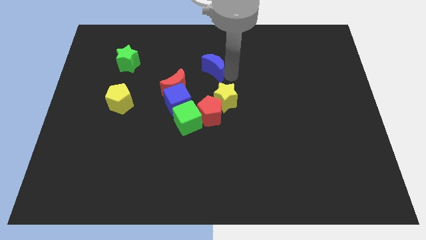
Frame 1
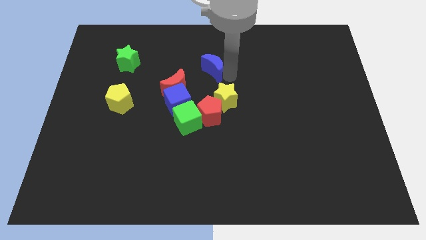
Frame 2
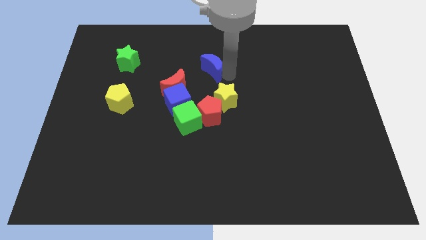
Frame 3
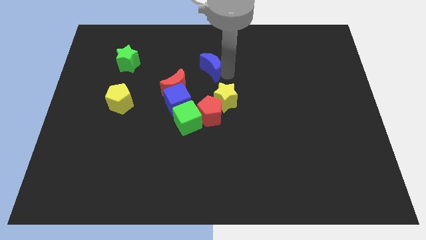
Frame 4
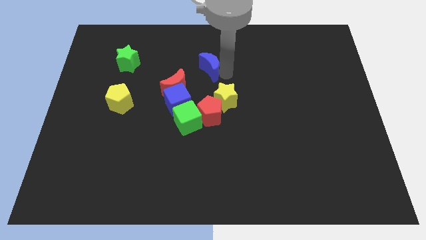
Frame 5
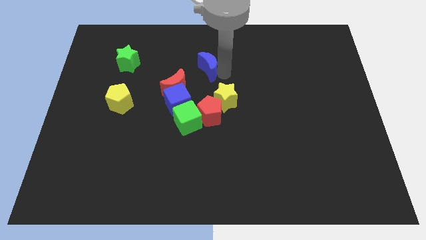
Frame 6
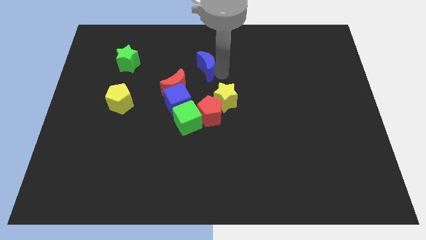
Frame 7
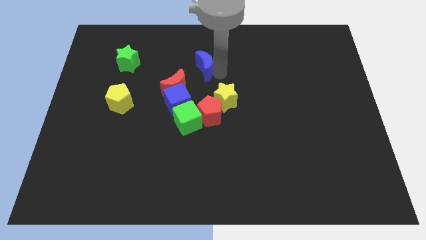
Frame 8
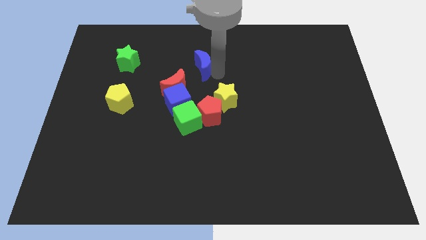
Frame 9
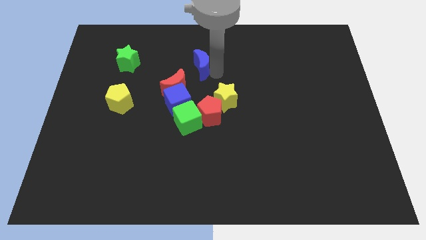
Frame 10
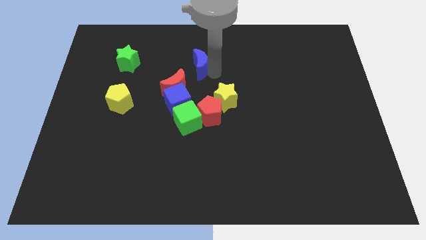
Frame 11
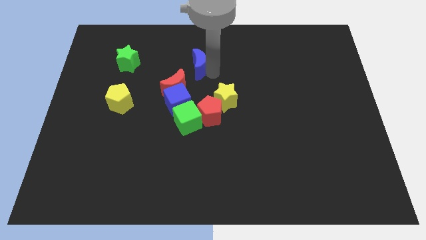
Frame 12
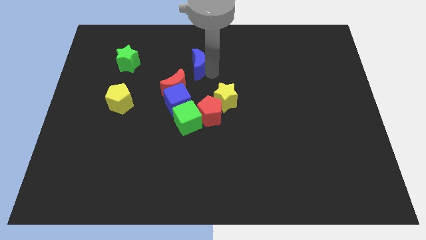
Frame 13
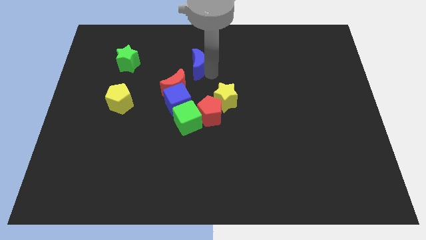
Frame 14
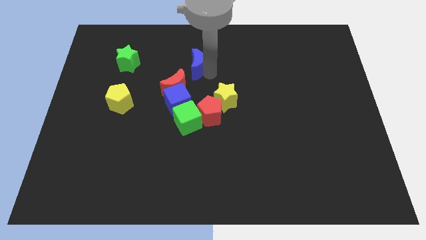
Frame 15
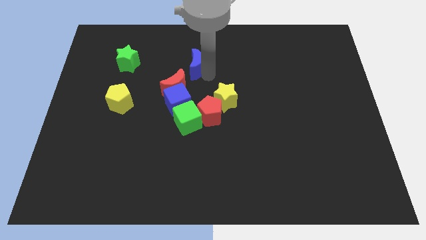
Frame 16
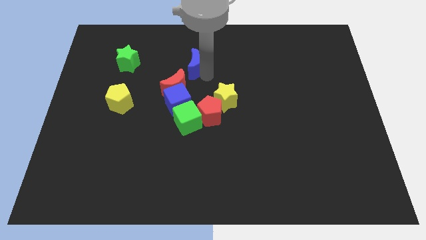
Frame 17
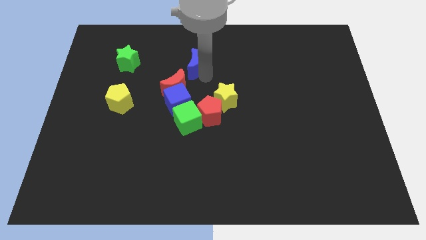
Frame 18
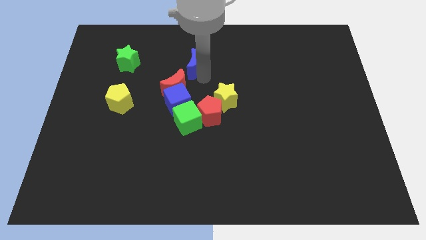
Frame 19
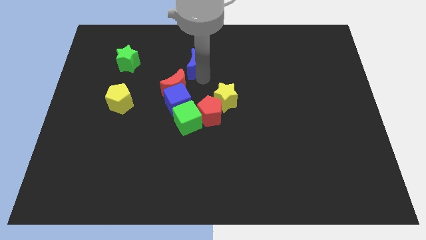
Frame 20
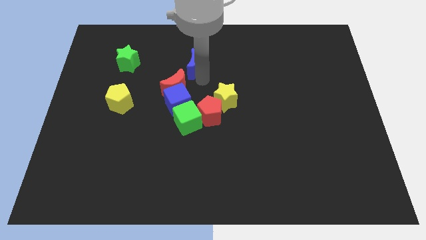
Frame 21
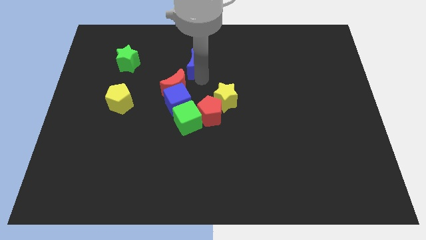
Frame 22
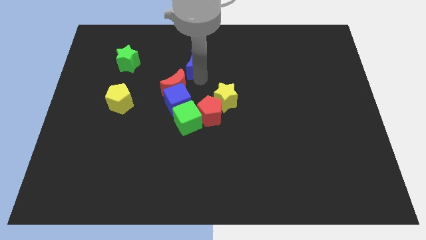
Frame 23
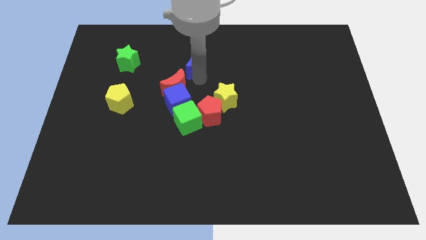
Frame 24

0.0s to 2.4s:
move the blue moon slightly to the left

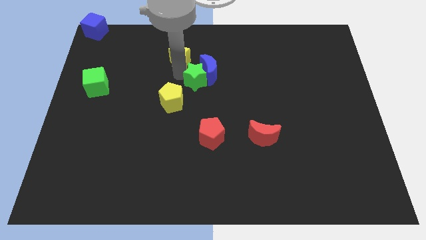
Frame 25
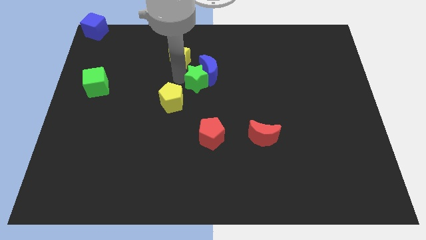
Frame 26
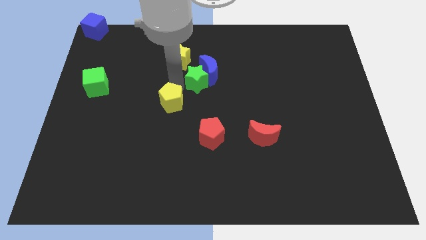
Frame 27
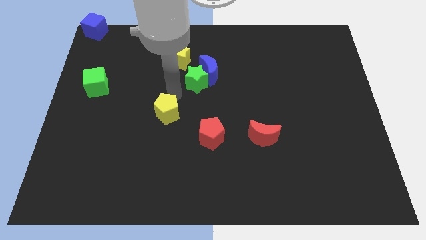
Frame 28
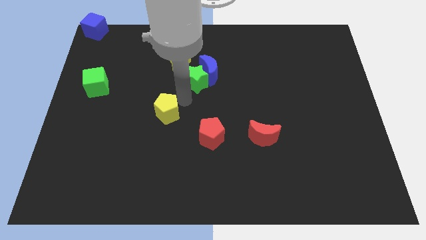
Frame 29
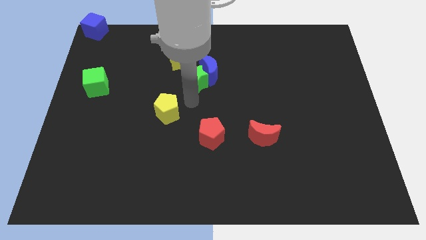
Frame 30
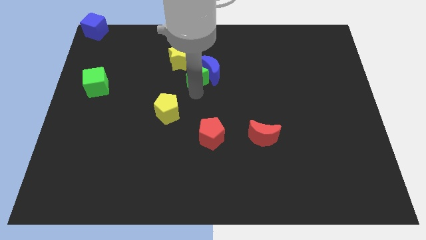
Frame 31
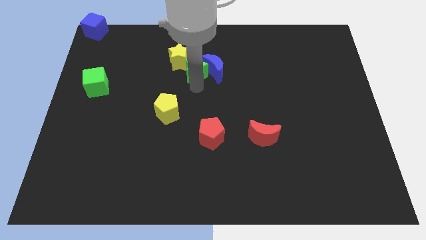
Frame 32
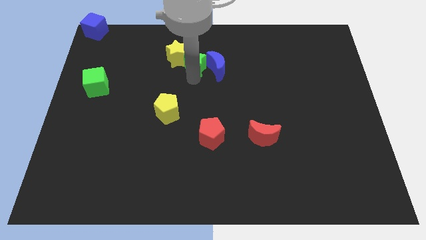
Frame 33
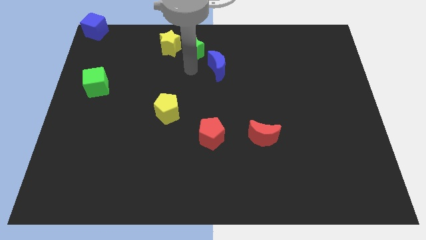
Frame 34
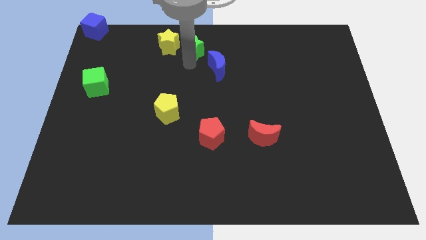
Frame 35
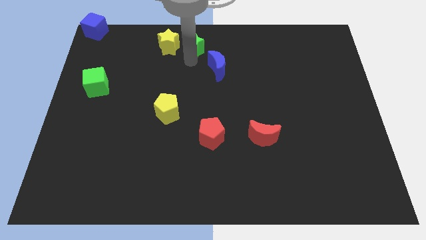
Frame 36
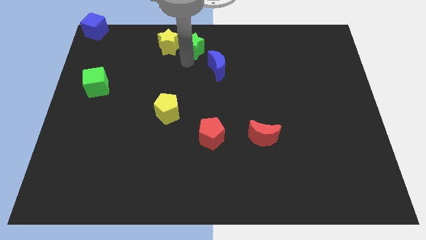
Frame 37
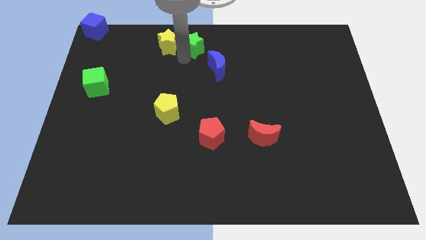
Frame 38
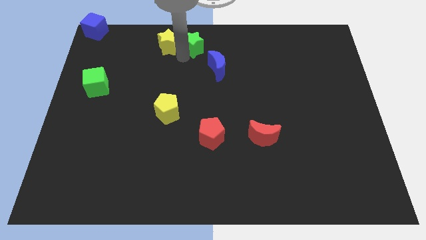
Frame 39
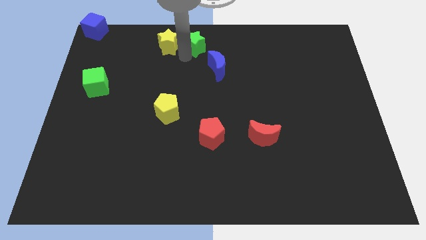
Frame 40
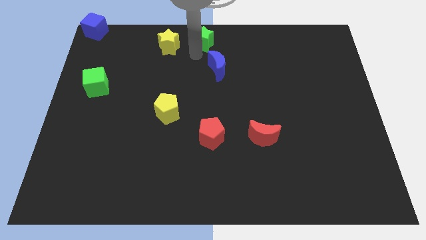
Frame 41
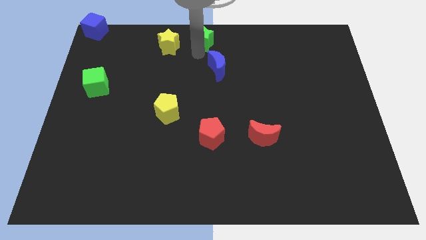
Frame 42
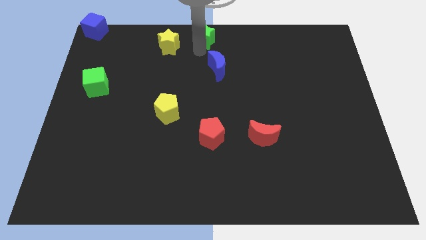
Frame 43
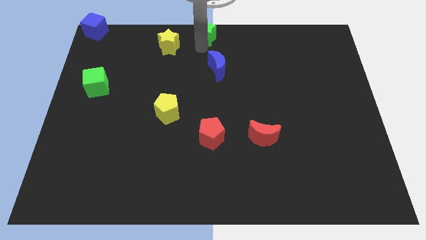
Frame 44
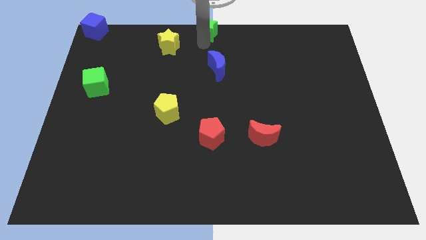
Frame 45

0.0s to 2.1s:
move the green star to the top center corner of the board

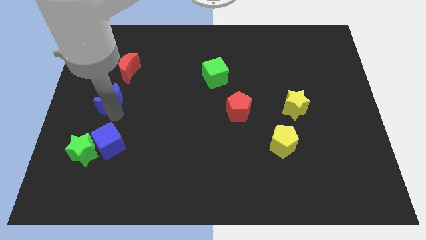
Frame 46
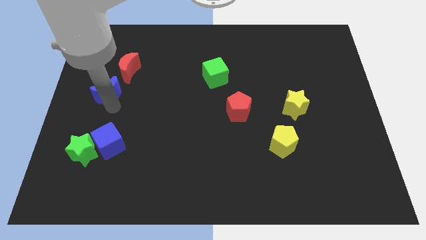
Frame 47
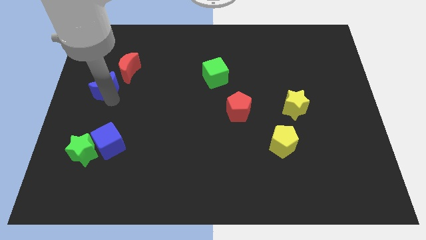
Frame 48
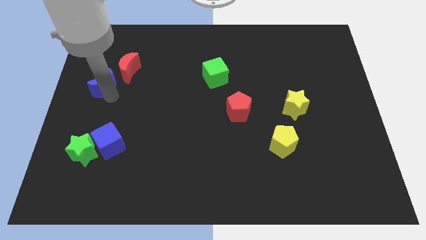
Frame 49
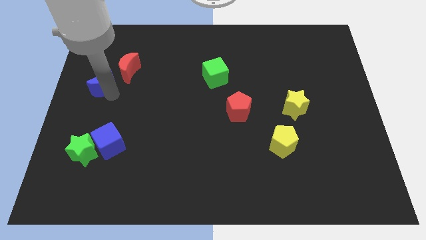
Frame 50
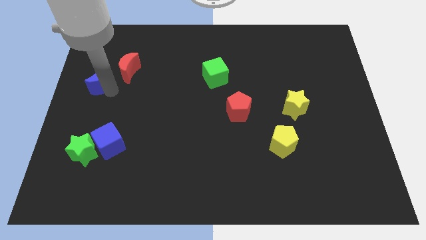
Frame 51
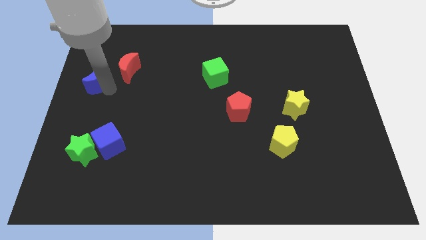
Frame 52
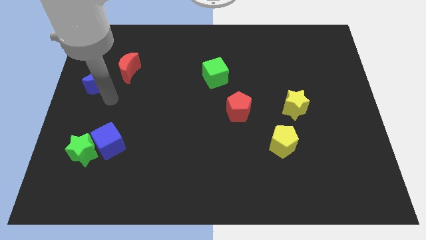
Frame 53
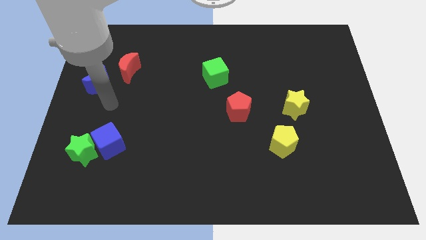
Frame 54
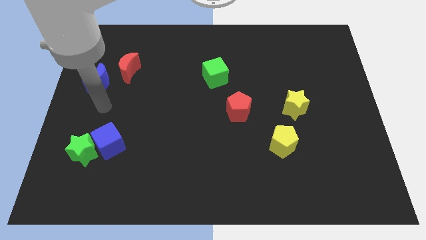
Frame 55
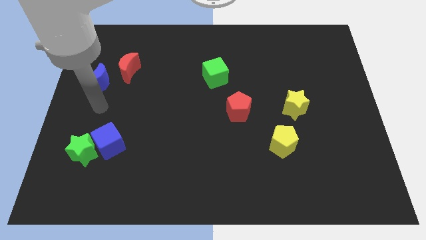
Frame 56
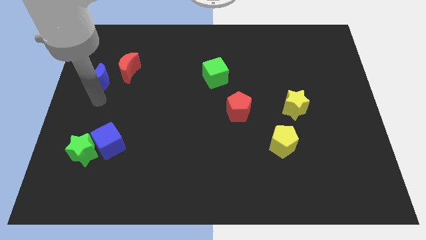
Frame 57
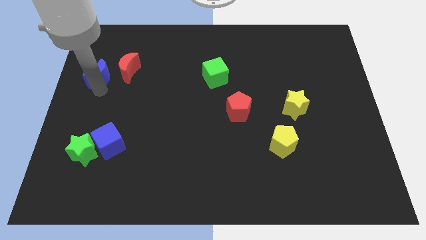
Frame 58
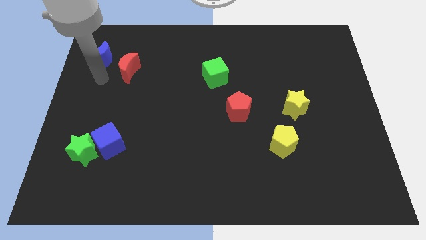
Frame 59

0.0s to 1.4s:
place the blue moon to the left of the red moon

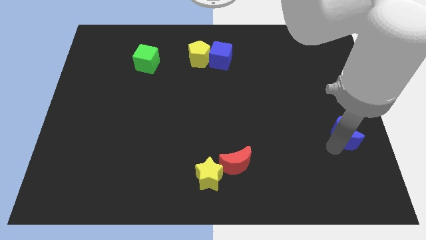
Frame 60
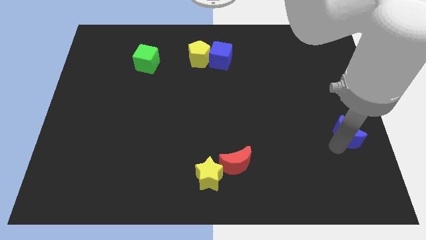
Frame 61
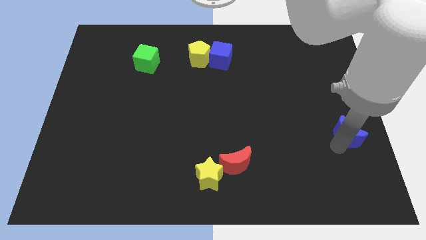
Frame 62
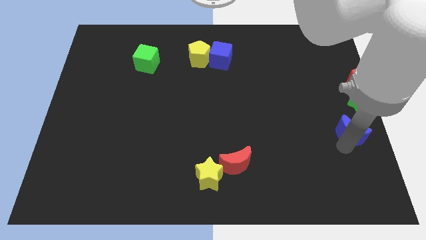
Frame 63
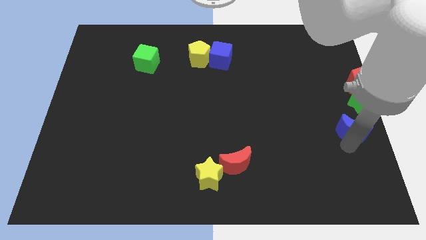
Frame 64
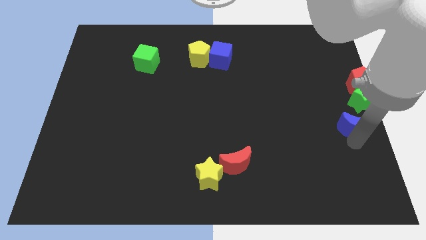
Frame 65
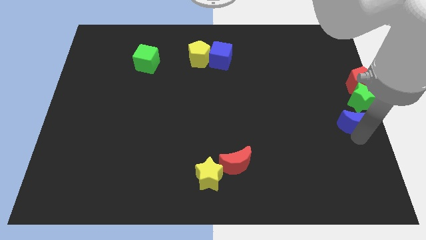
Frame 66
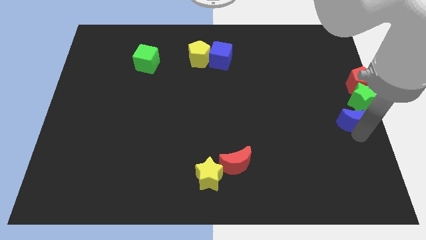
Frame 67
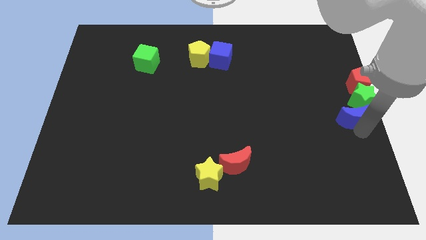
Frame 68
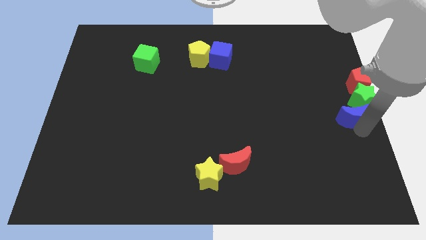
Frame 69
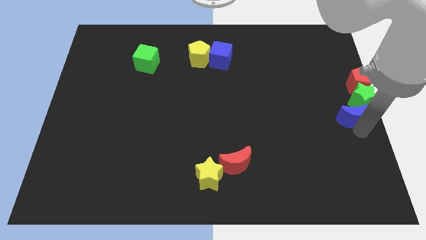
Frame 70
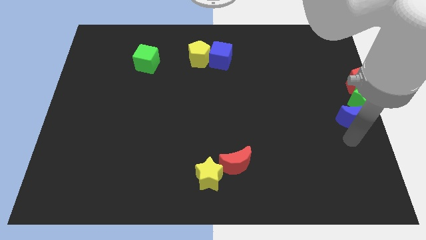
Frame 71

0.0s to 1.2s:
move blue moon bottom left to green star

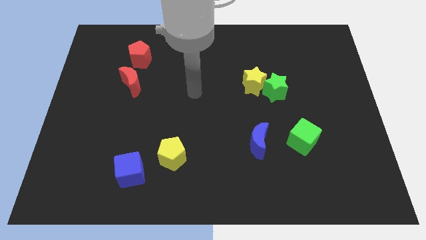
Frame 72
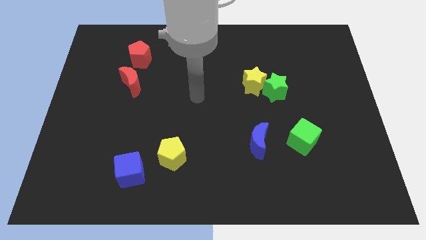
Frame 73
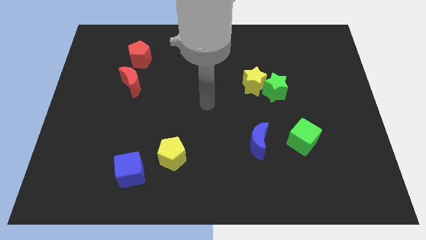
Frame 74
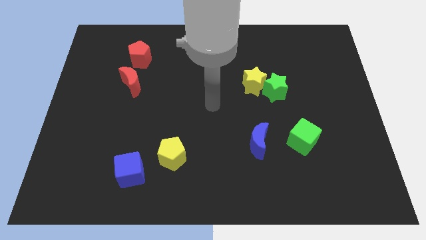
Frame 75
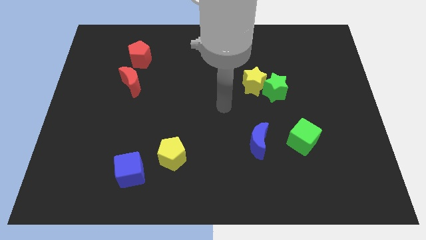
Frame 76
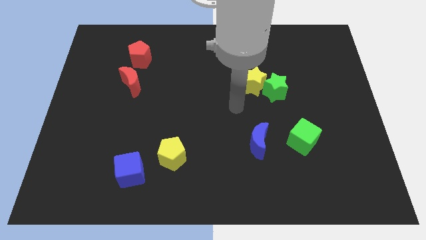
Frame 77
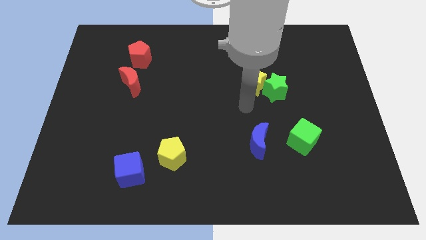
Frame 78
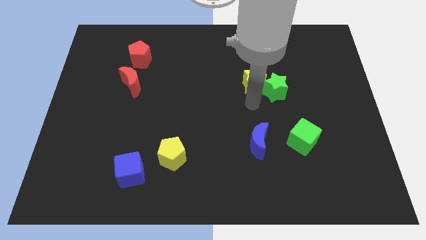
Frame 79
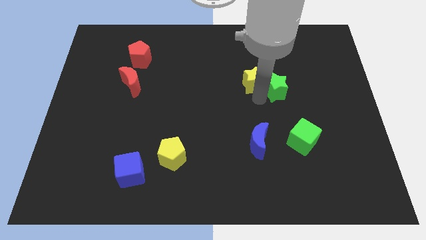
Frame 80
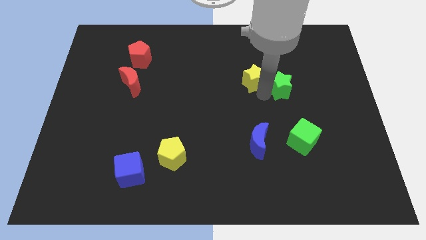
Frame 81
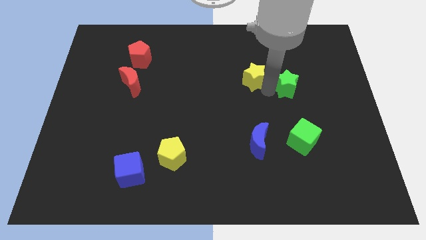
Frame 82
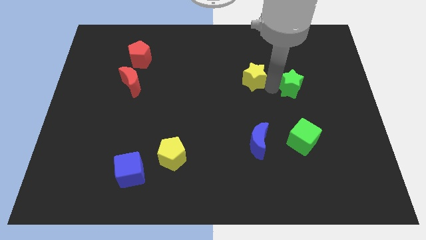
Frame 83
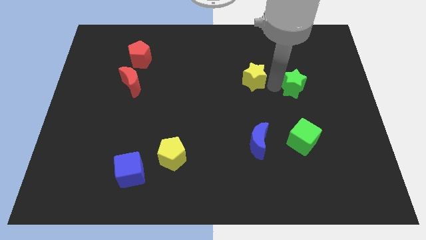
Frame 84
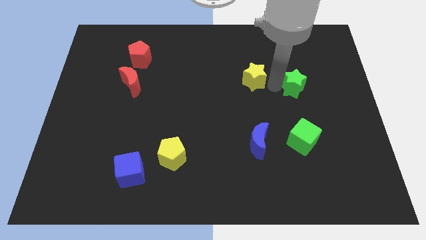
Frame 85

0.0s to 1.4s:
place your arm in between the yellow and the green star

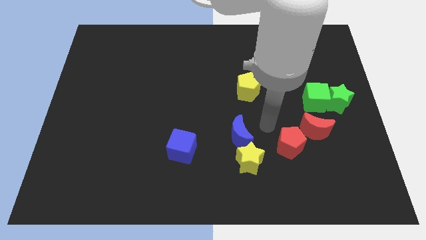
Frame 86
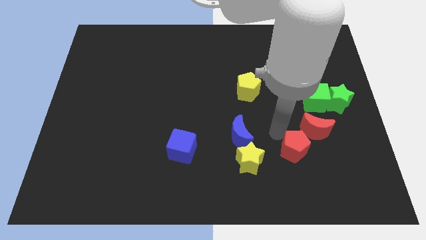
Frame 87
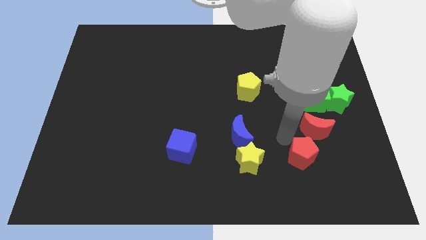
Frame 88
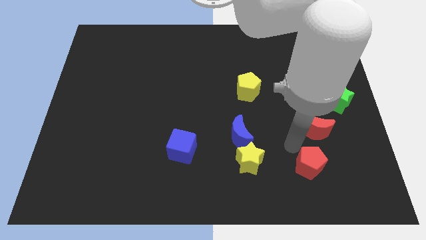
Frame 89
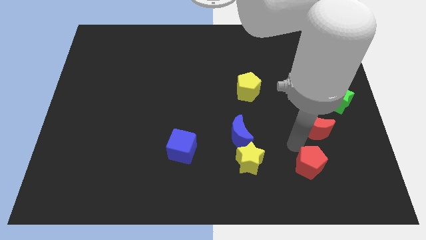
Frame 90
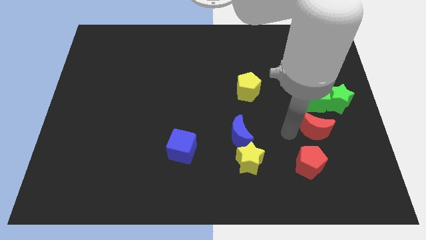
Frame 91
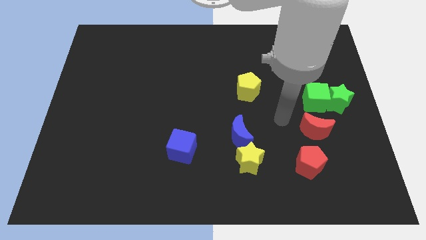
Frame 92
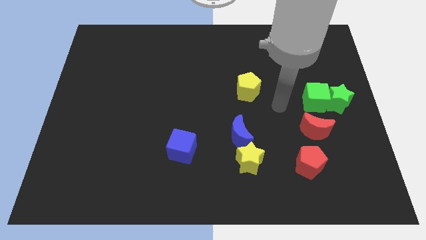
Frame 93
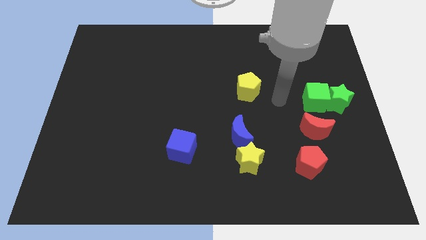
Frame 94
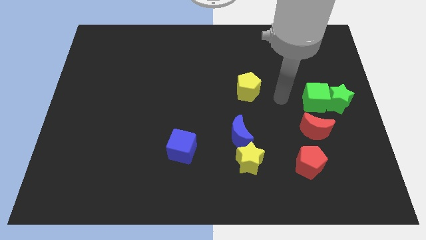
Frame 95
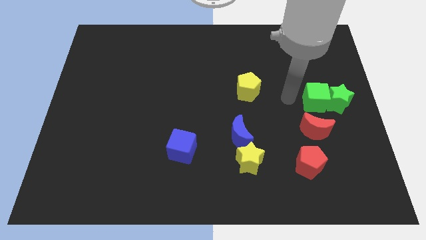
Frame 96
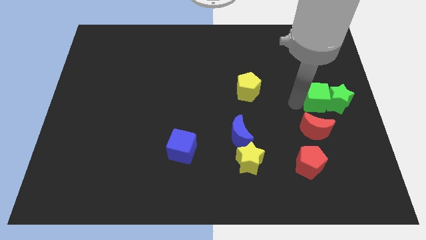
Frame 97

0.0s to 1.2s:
move your arm close to the left side of the green cube
